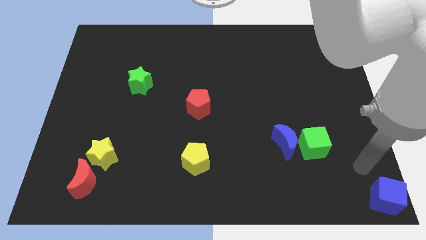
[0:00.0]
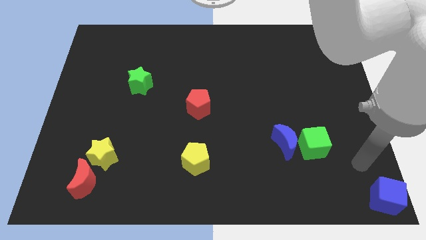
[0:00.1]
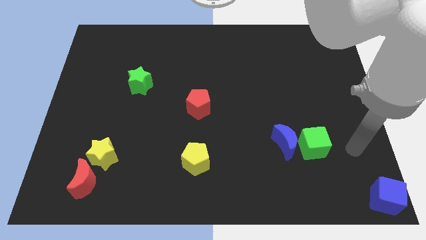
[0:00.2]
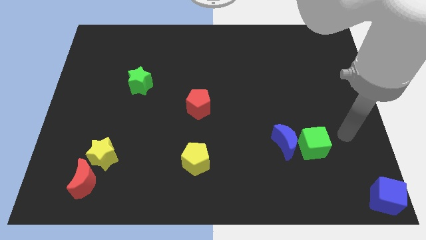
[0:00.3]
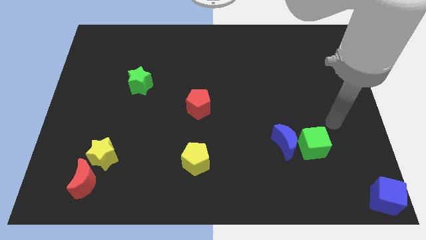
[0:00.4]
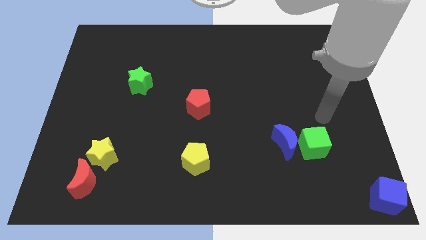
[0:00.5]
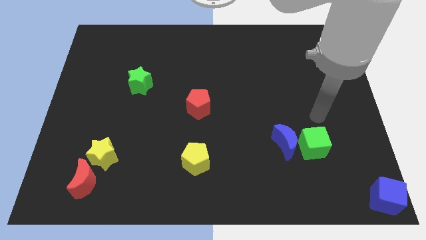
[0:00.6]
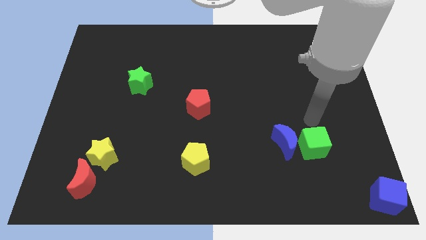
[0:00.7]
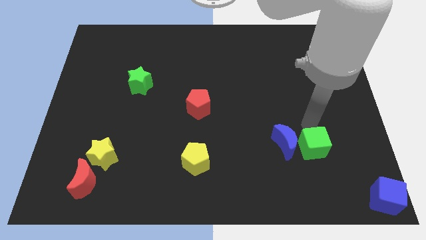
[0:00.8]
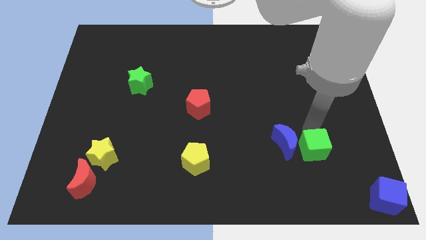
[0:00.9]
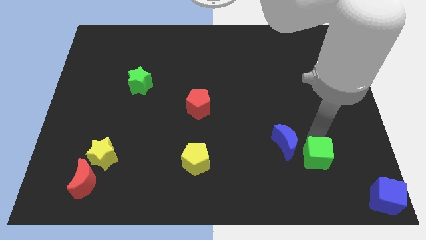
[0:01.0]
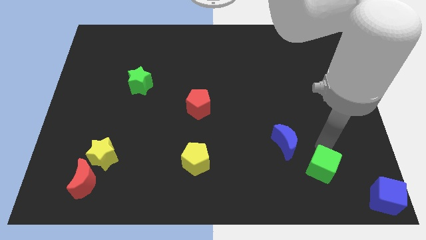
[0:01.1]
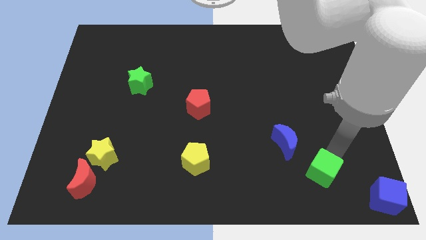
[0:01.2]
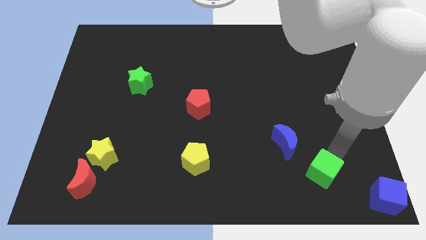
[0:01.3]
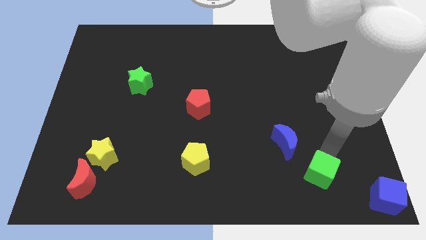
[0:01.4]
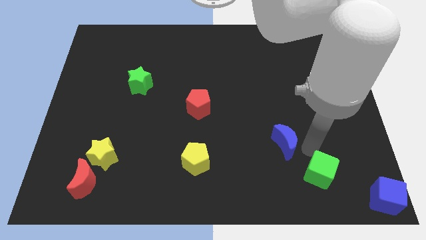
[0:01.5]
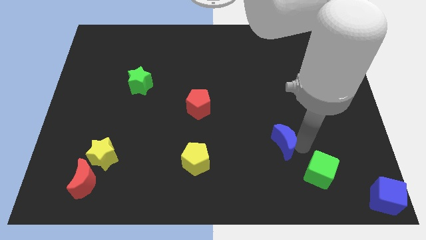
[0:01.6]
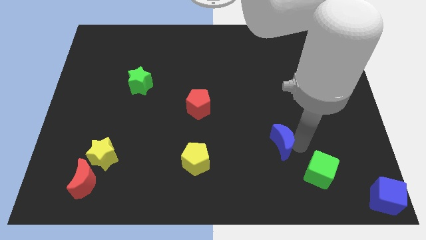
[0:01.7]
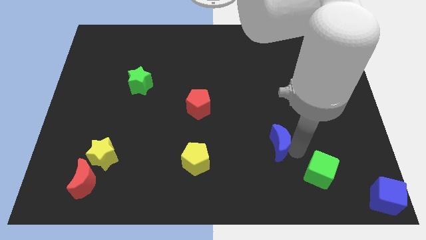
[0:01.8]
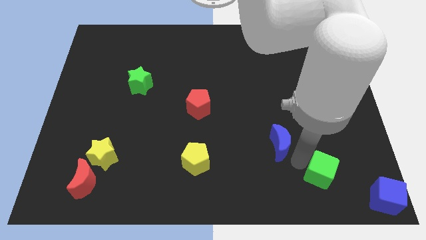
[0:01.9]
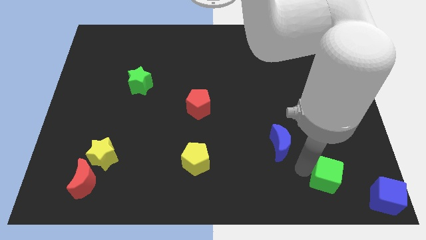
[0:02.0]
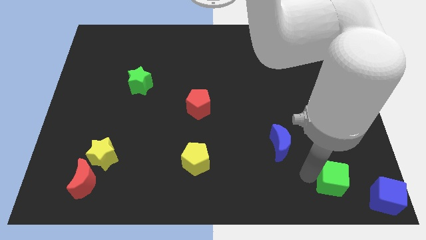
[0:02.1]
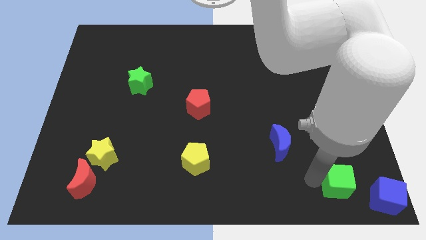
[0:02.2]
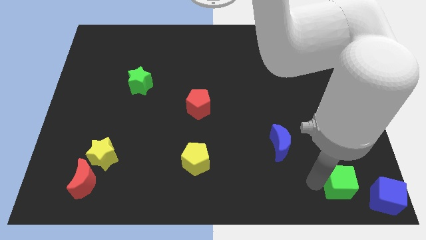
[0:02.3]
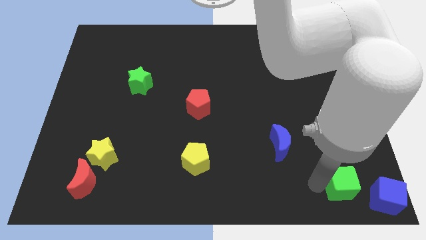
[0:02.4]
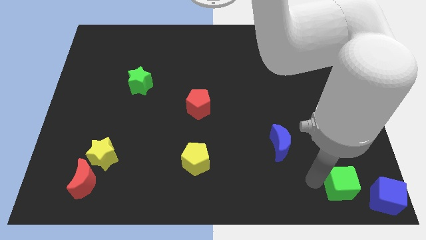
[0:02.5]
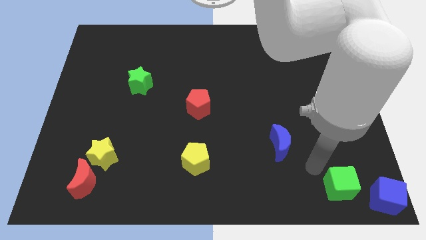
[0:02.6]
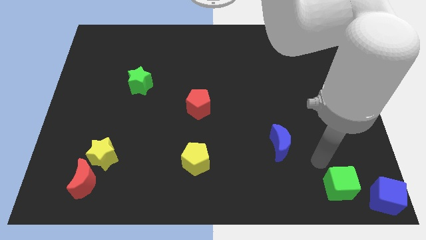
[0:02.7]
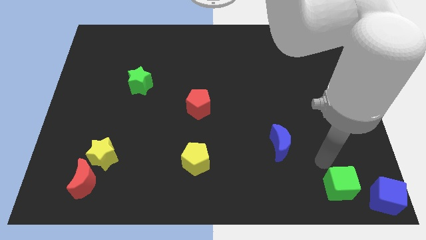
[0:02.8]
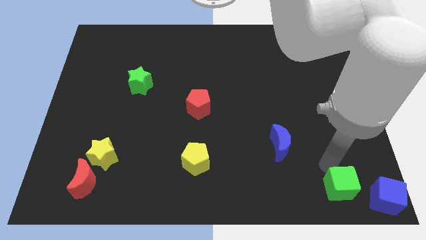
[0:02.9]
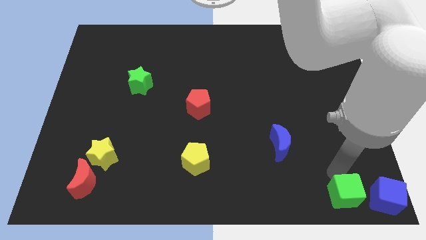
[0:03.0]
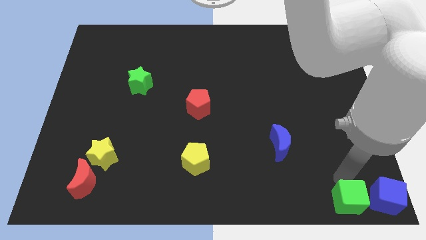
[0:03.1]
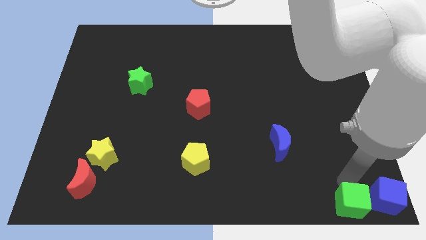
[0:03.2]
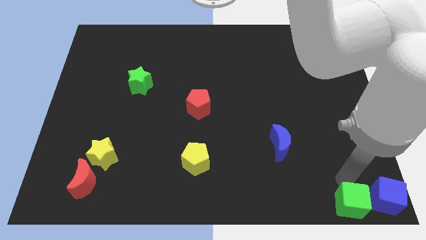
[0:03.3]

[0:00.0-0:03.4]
push the green cube towards the bottom right corner of the board

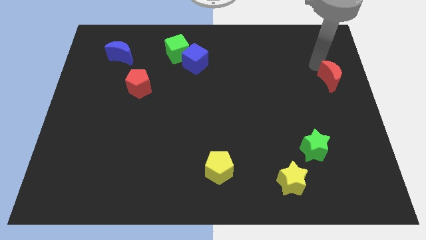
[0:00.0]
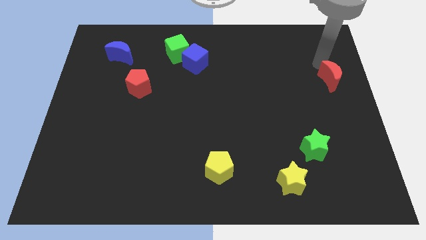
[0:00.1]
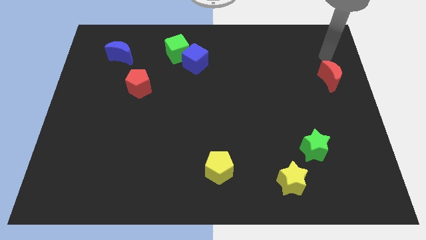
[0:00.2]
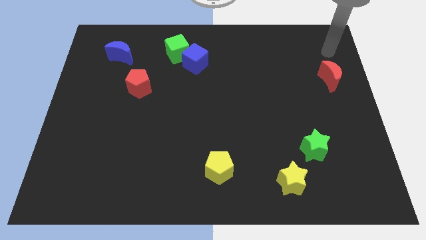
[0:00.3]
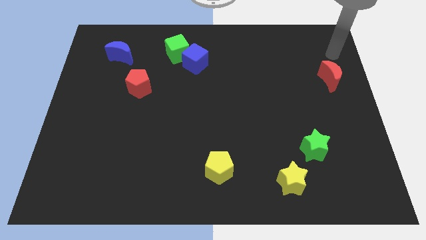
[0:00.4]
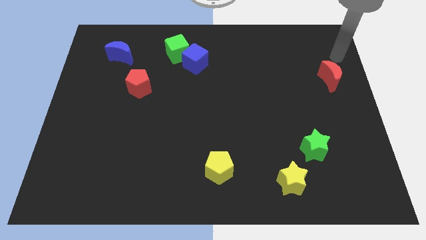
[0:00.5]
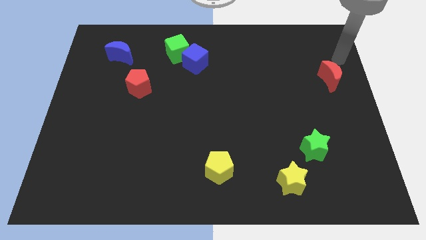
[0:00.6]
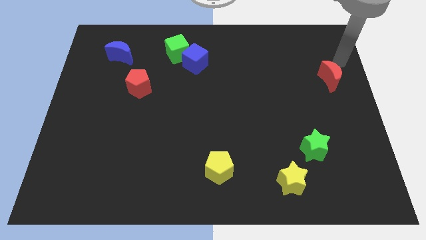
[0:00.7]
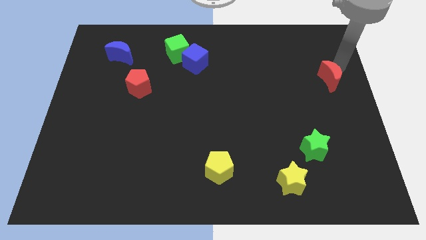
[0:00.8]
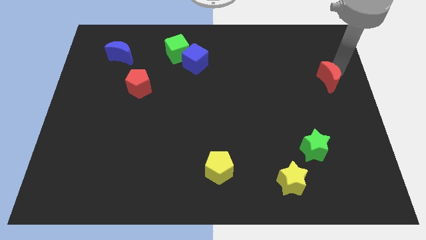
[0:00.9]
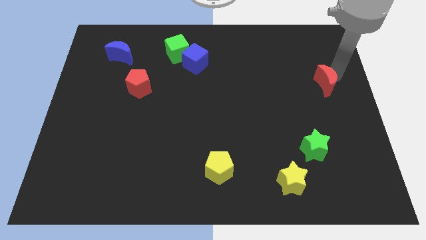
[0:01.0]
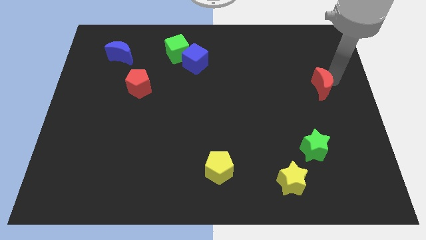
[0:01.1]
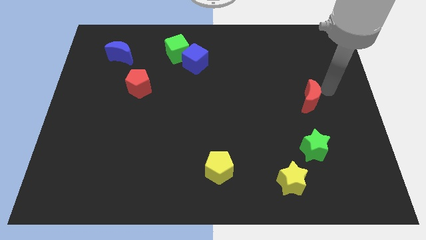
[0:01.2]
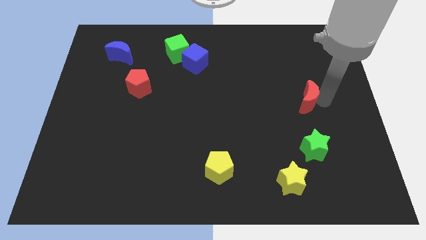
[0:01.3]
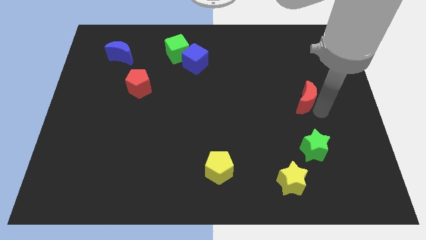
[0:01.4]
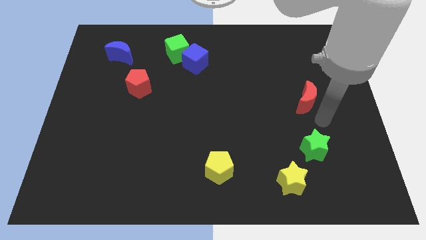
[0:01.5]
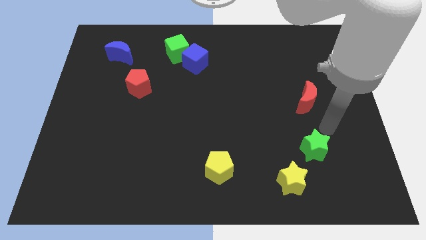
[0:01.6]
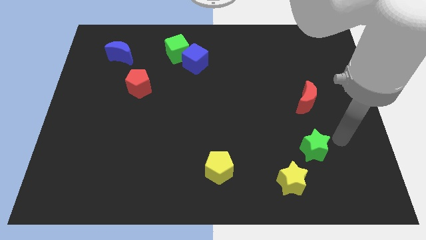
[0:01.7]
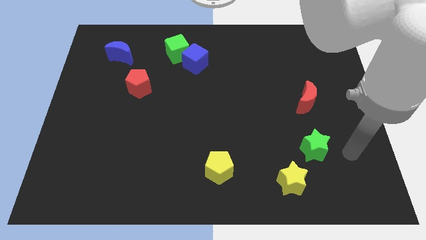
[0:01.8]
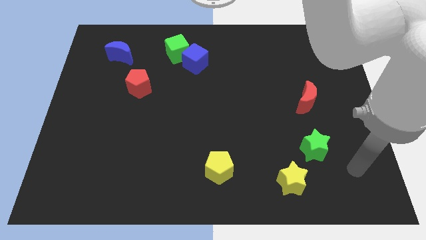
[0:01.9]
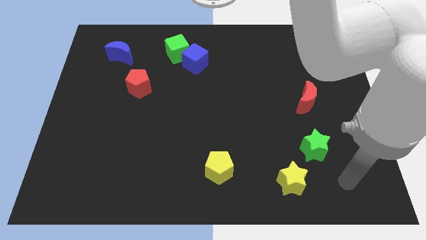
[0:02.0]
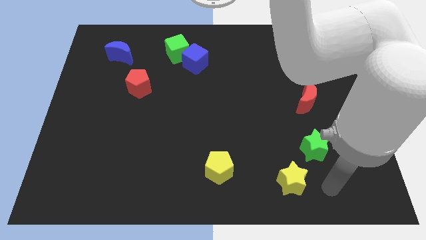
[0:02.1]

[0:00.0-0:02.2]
push the red moon slightly to the bottom left of the board

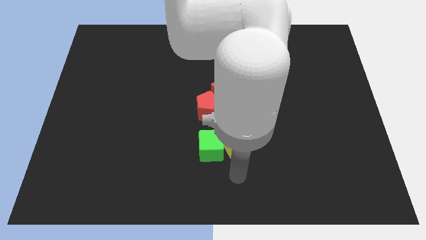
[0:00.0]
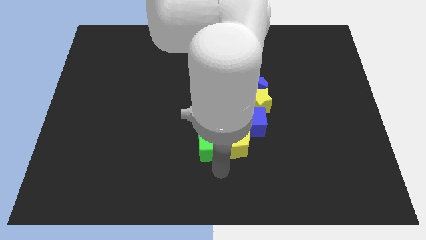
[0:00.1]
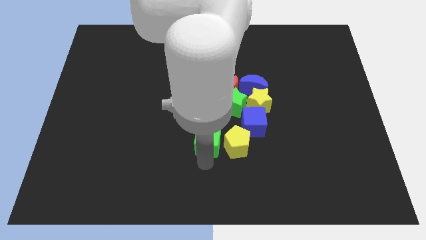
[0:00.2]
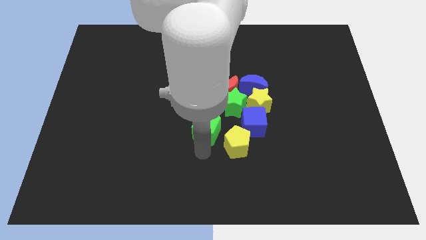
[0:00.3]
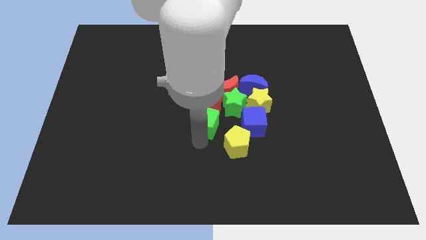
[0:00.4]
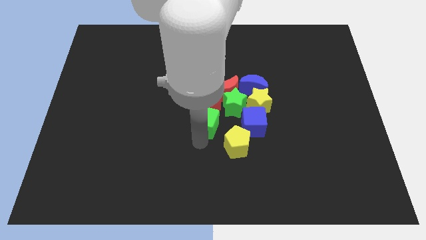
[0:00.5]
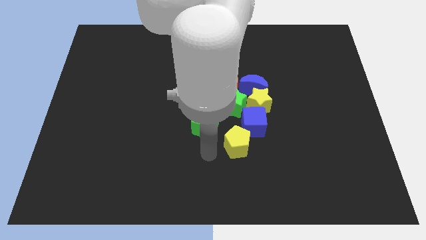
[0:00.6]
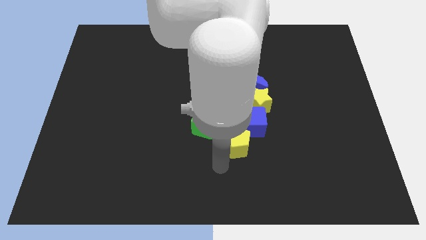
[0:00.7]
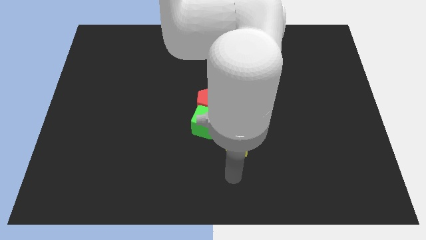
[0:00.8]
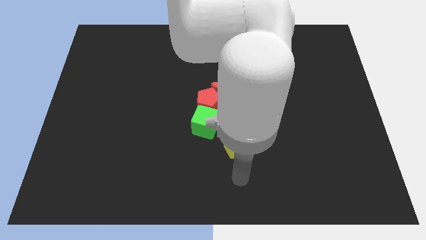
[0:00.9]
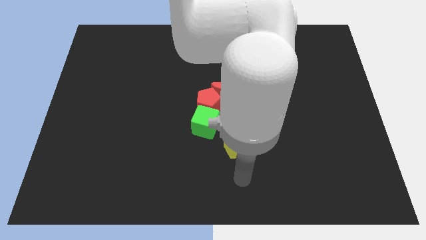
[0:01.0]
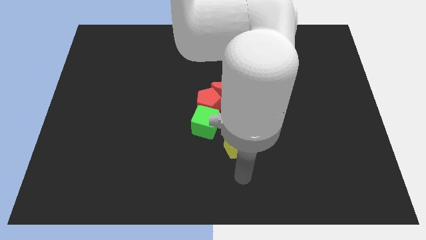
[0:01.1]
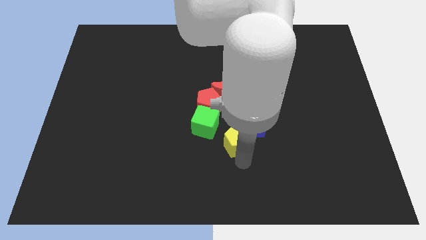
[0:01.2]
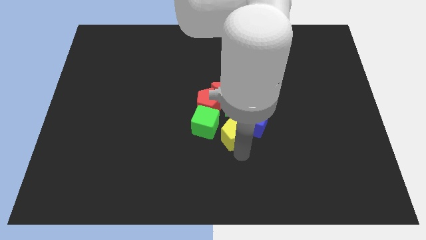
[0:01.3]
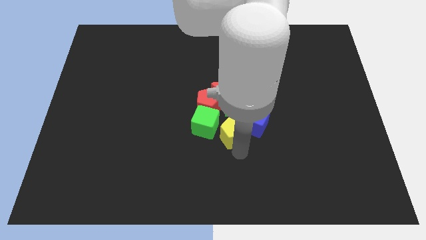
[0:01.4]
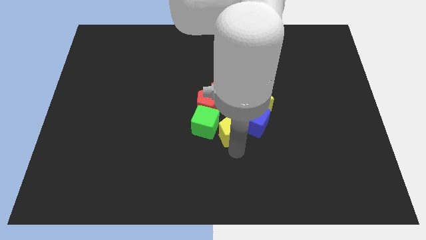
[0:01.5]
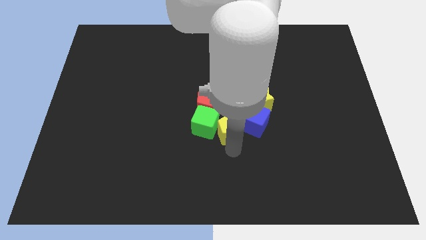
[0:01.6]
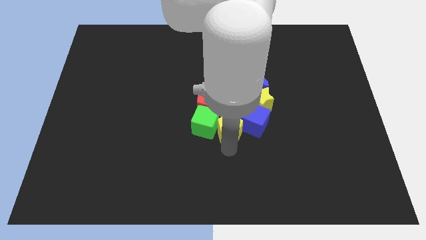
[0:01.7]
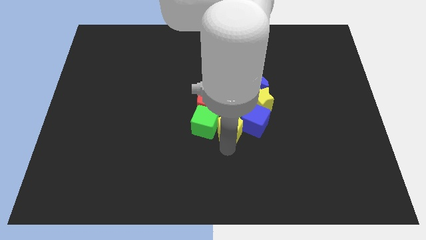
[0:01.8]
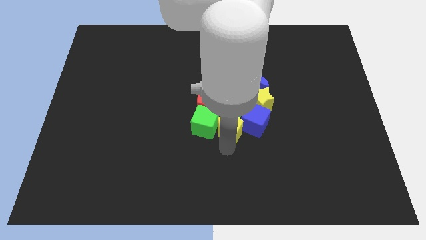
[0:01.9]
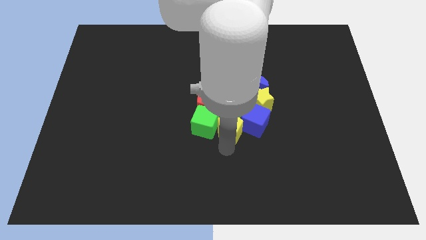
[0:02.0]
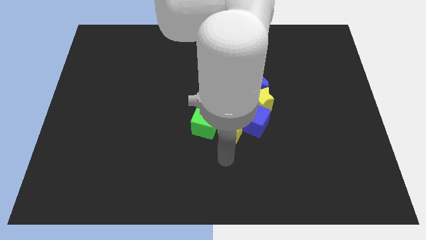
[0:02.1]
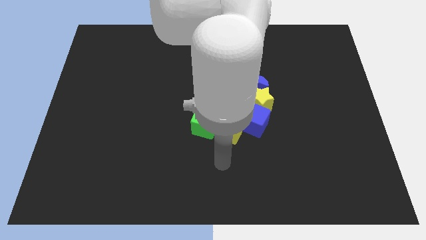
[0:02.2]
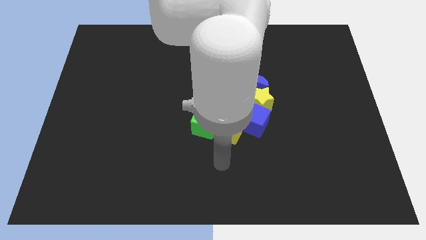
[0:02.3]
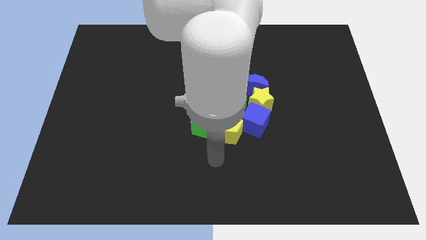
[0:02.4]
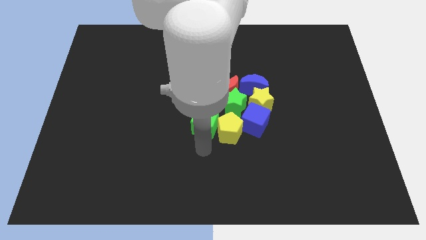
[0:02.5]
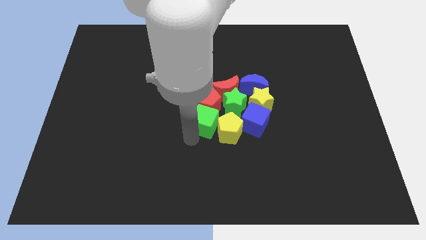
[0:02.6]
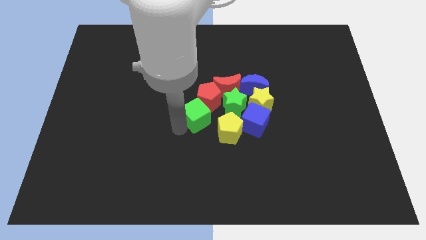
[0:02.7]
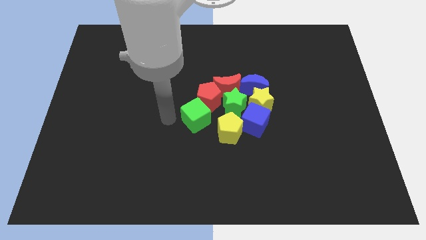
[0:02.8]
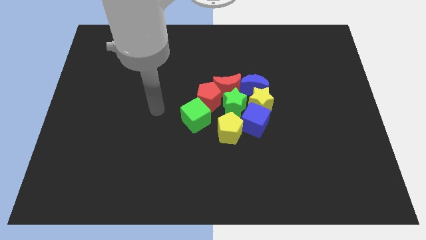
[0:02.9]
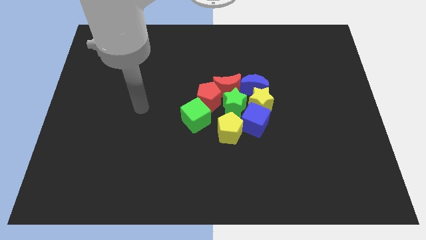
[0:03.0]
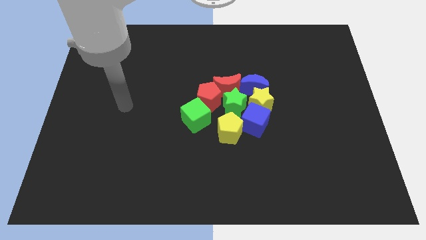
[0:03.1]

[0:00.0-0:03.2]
place the green cube and yellow pentagon to the group of blocks at the center of the board

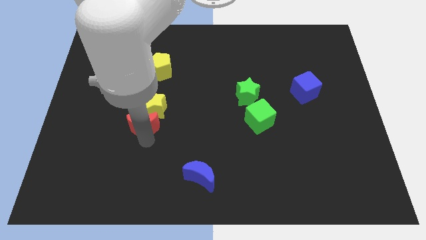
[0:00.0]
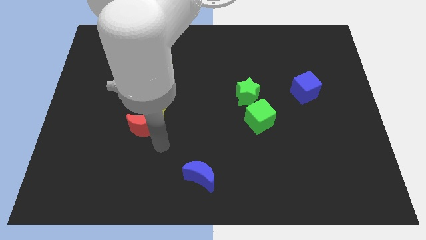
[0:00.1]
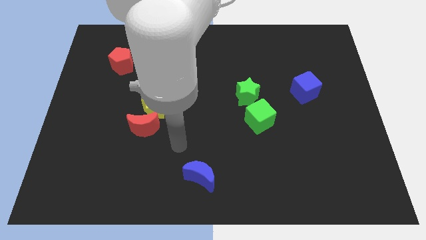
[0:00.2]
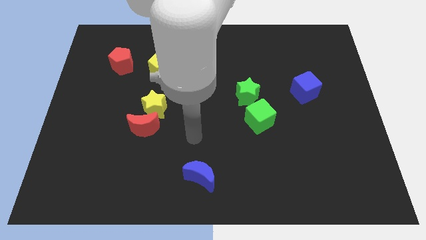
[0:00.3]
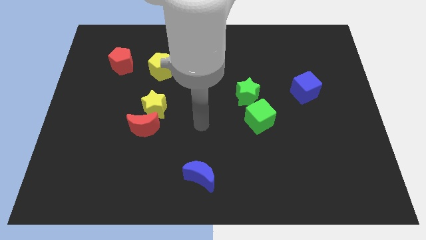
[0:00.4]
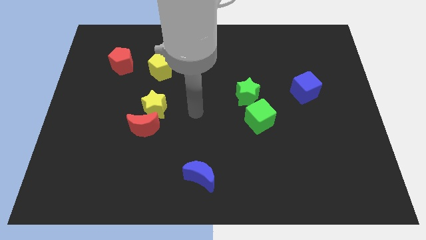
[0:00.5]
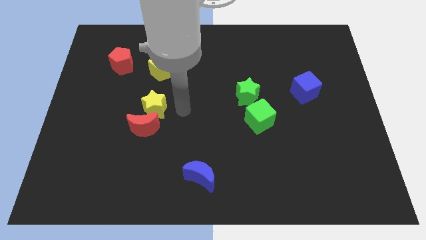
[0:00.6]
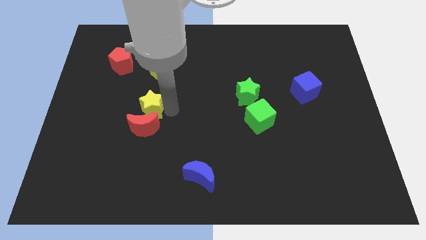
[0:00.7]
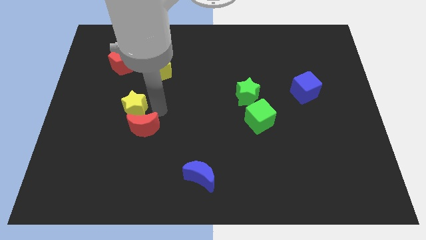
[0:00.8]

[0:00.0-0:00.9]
move the yellow star slightly to the left
